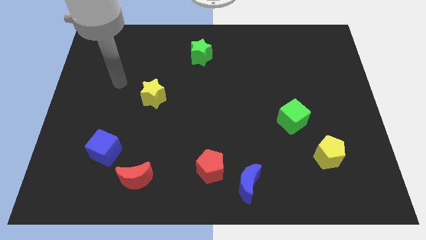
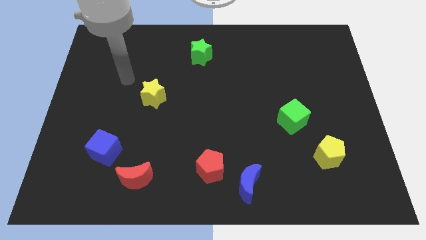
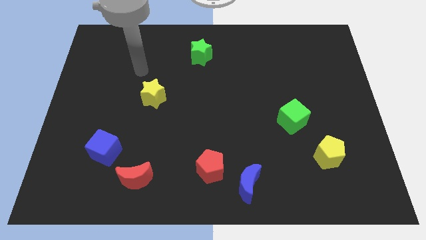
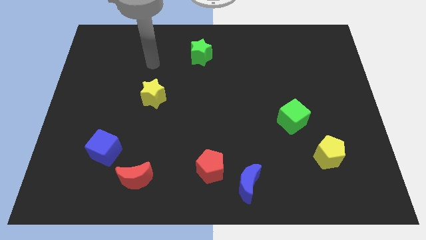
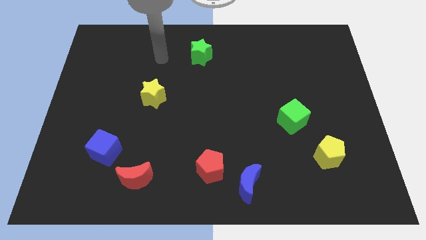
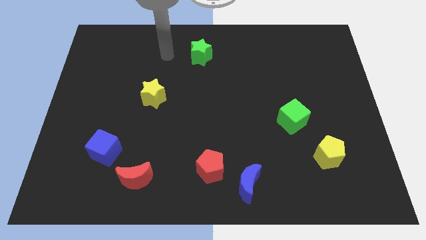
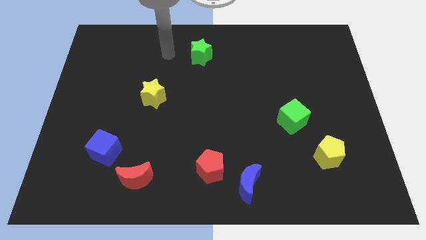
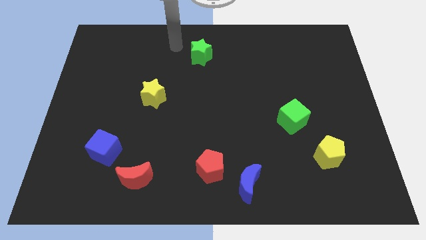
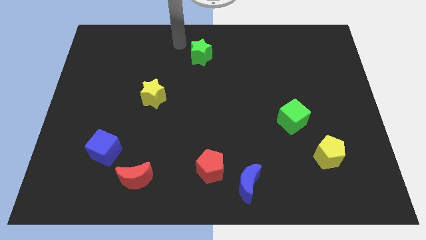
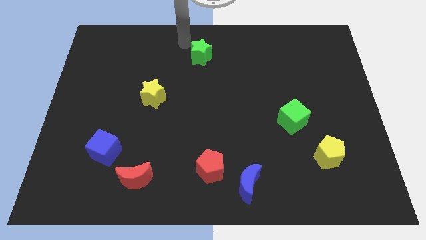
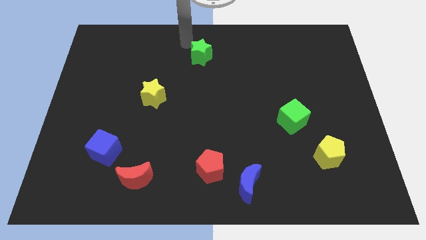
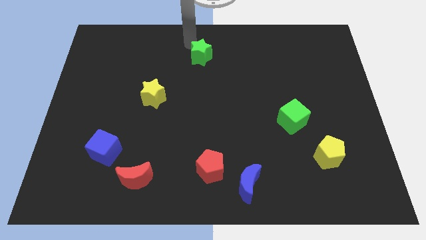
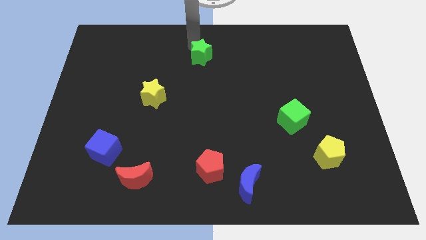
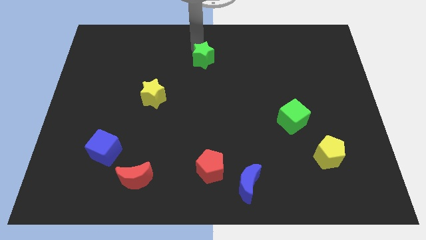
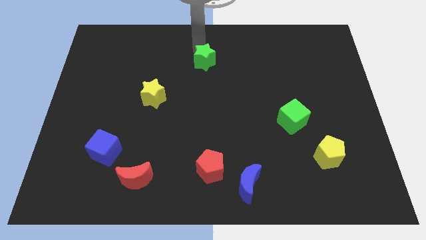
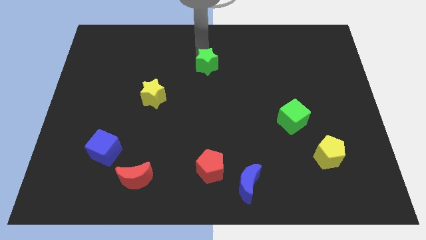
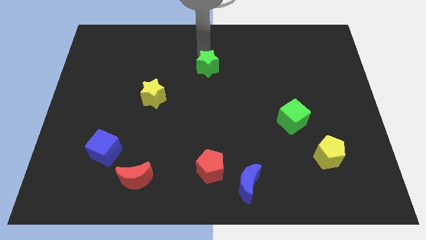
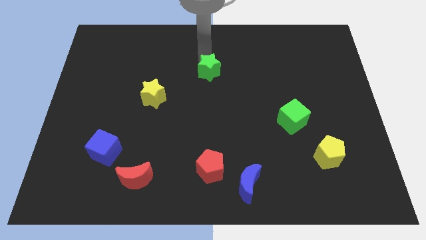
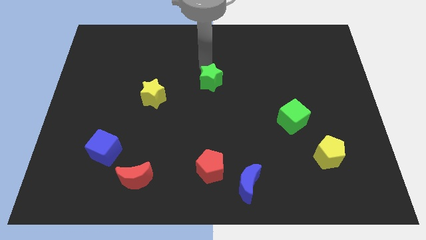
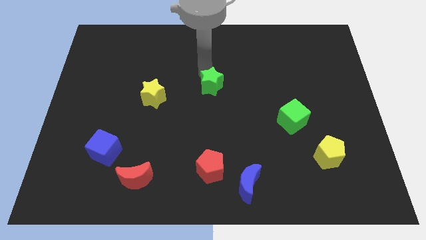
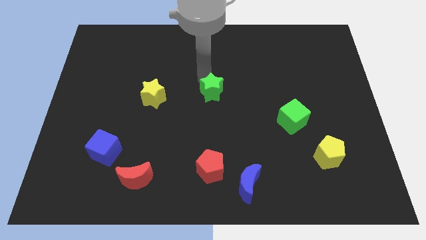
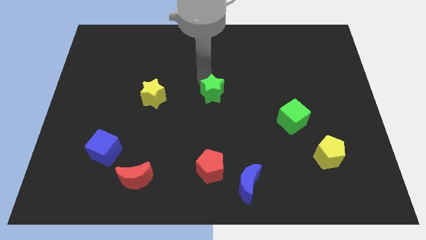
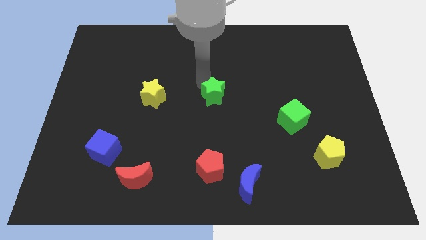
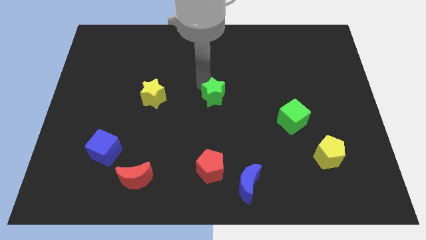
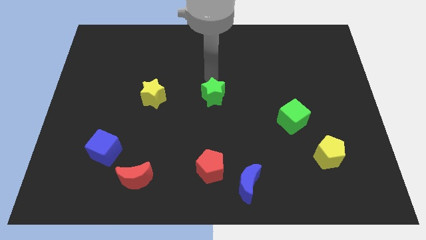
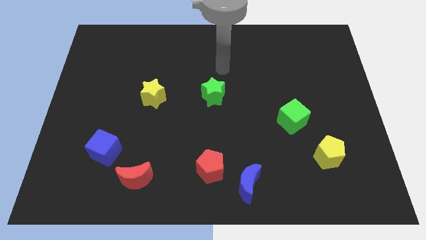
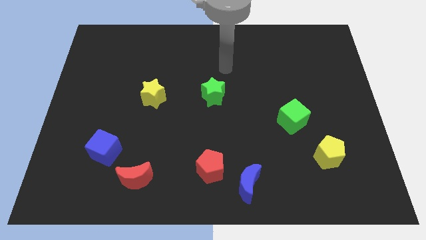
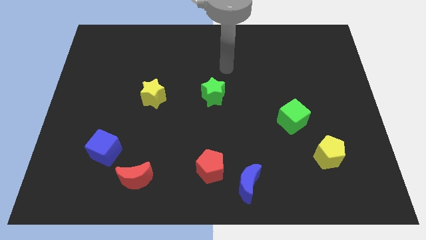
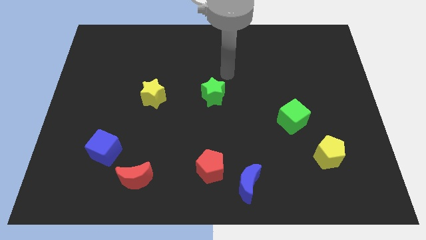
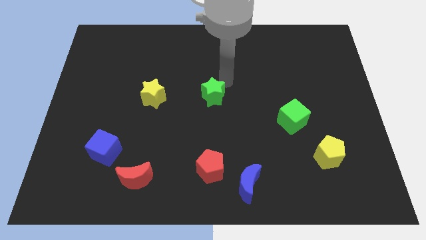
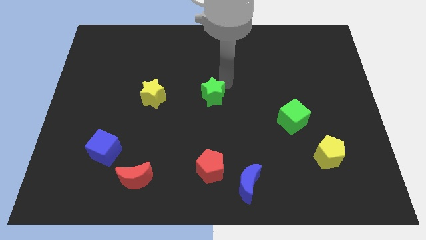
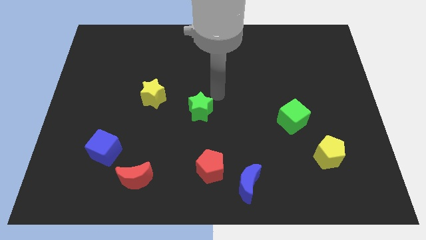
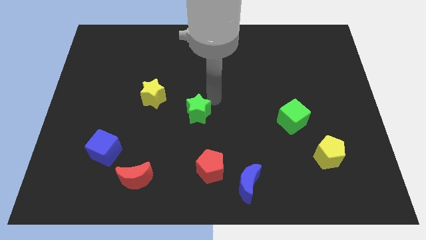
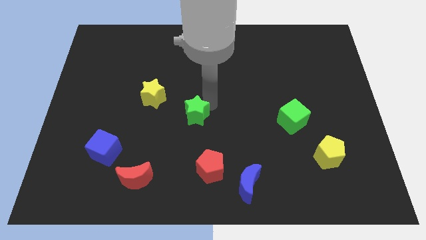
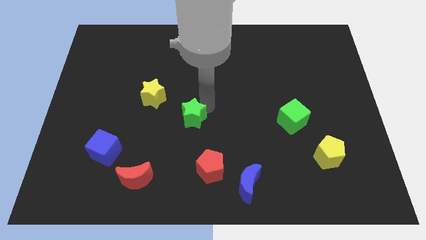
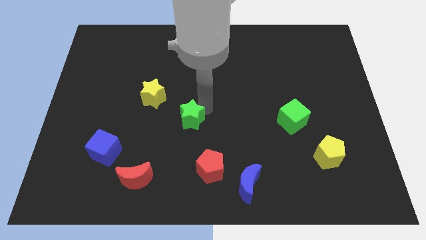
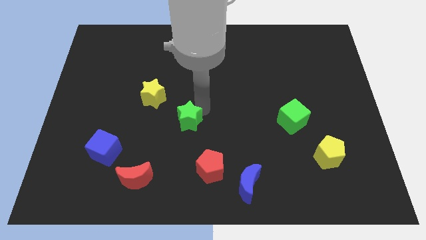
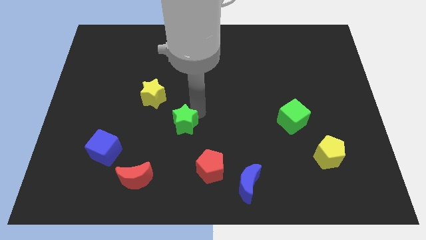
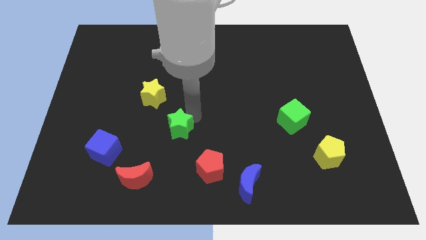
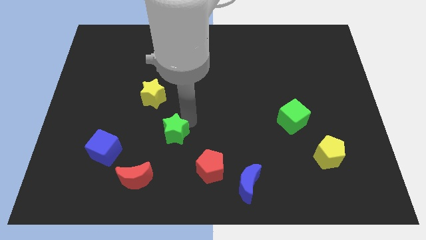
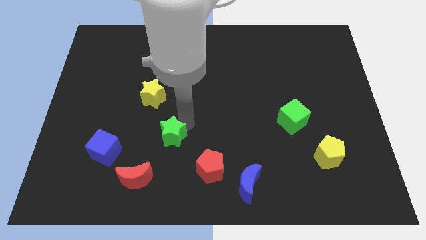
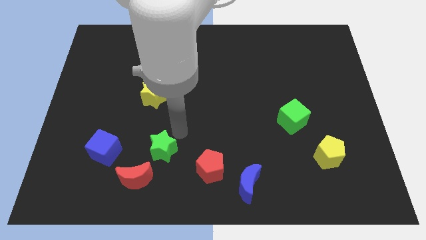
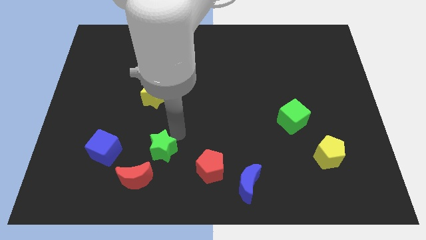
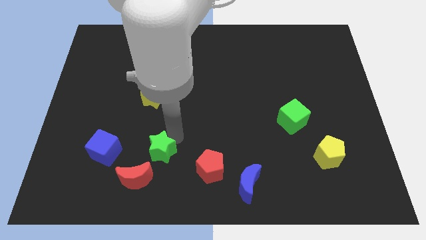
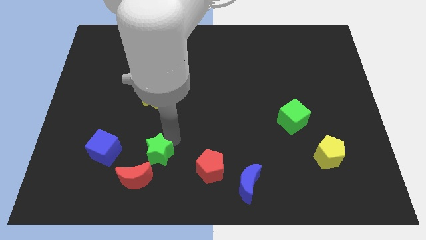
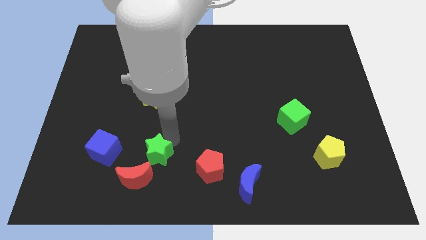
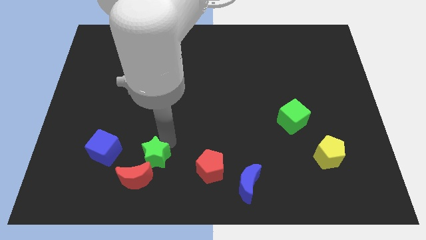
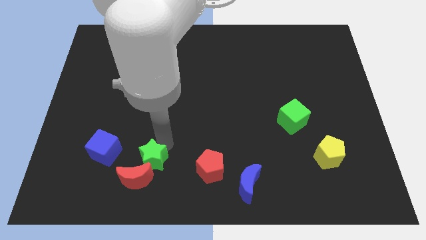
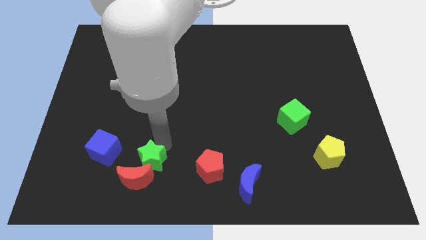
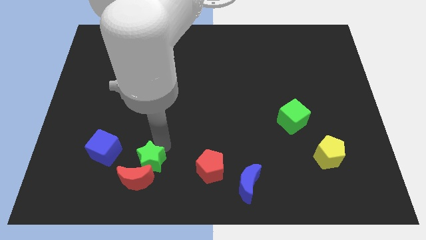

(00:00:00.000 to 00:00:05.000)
move the green star close to the red moon

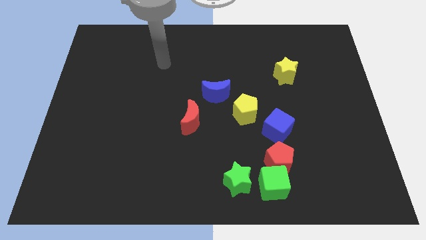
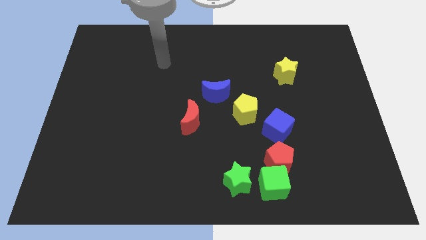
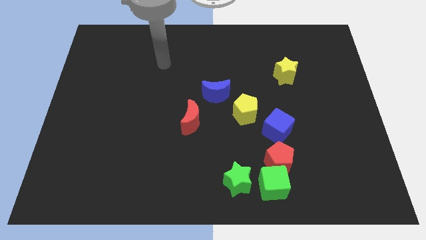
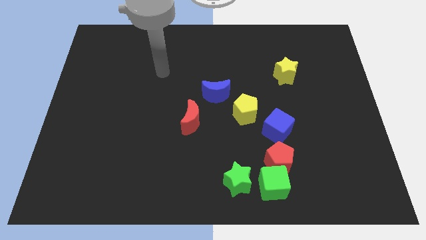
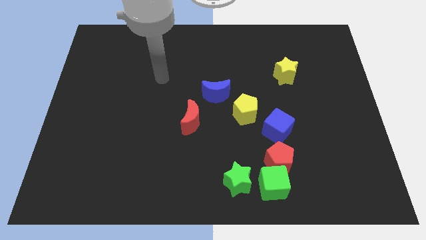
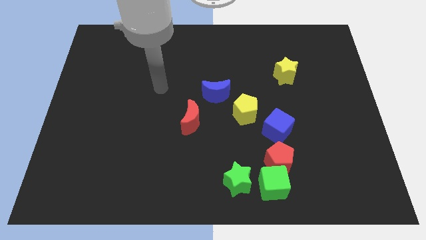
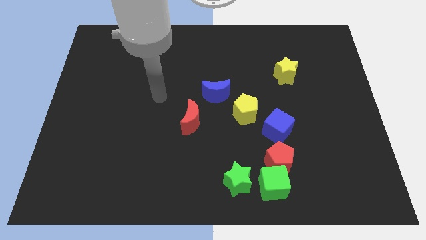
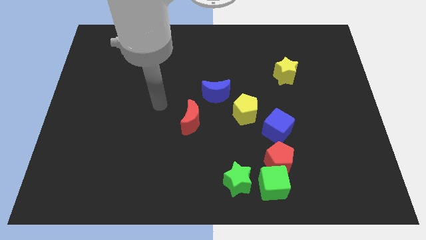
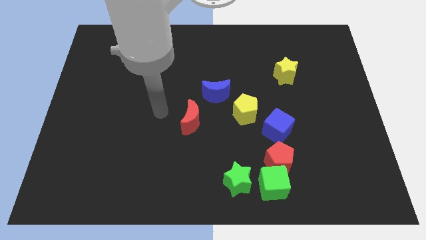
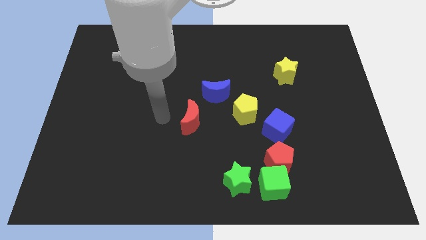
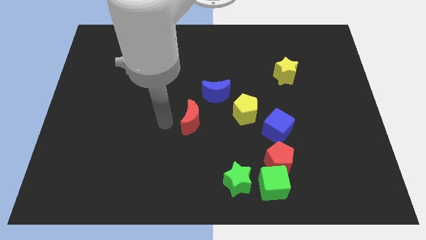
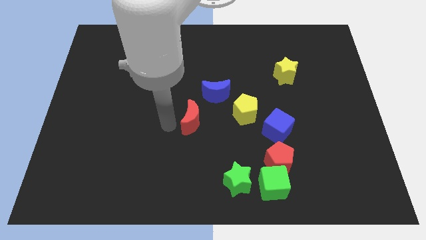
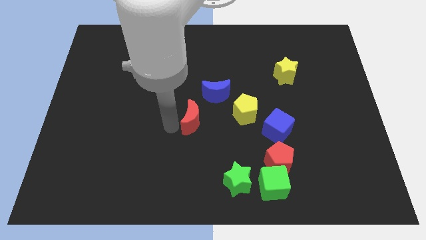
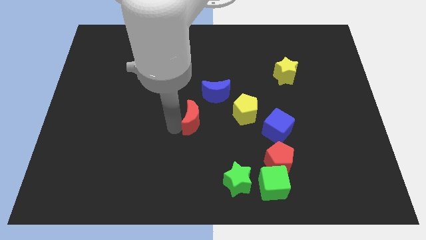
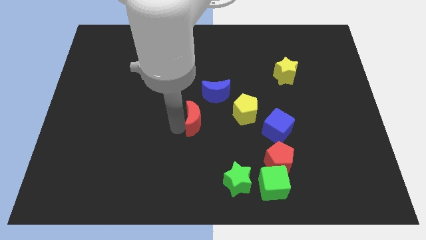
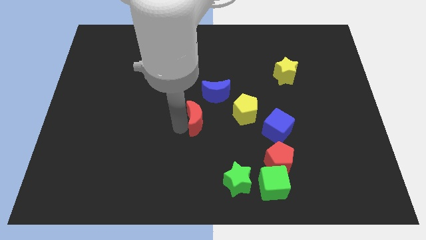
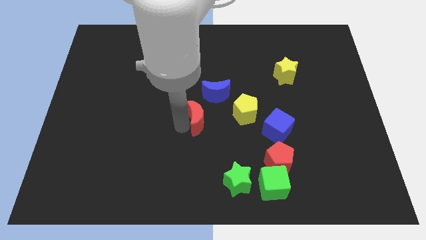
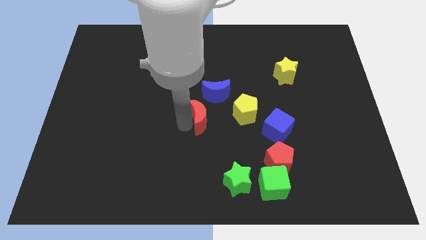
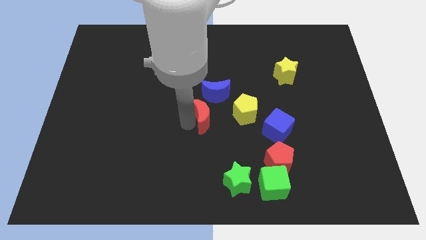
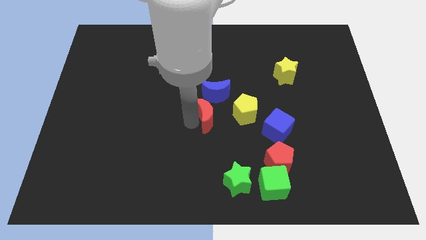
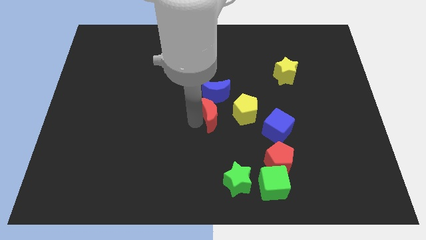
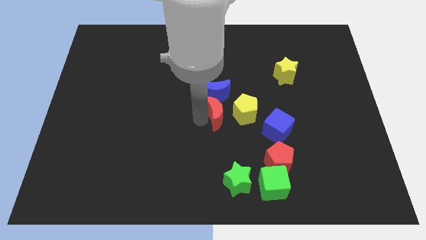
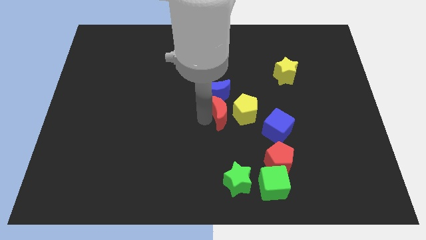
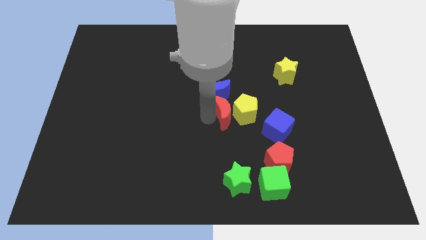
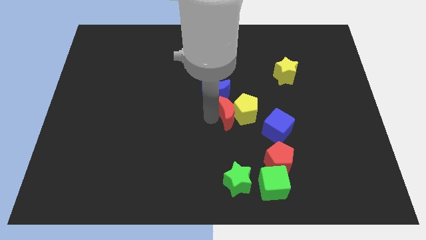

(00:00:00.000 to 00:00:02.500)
push the red moon close to the yellow pentagon

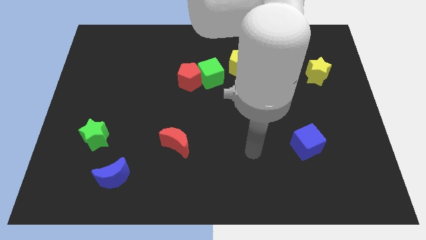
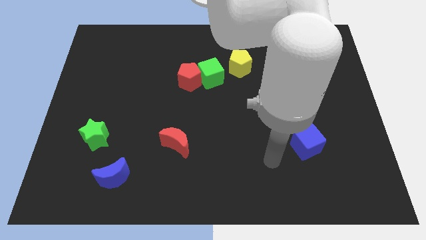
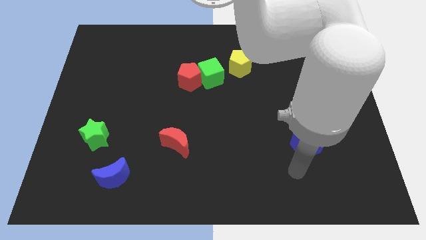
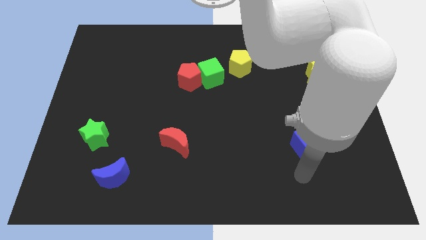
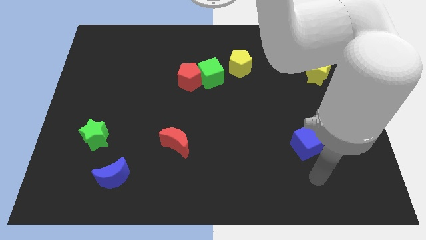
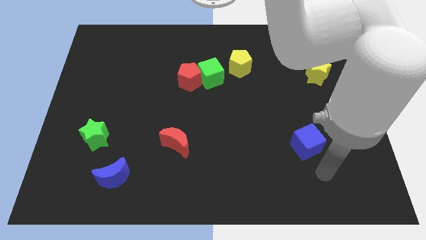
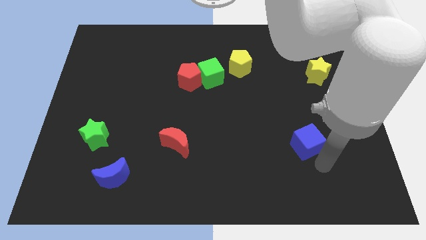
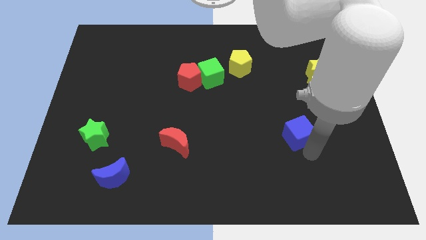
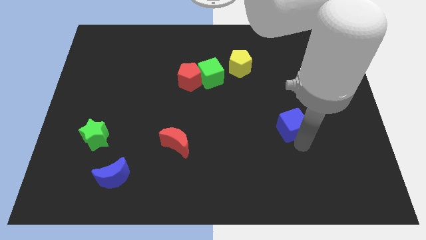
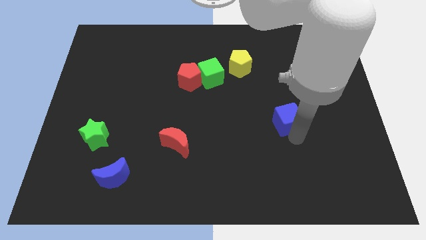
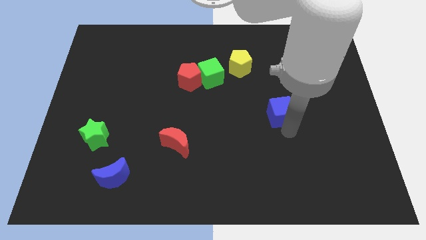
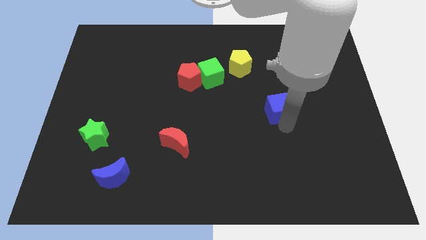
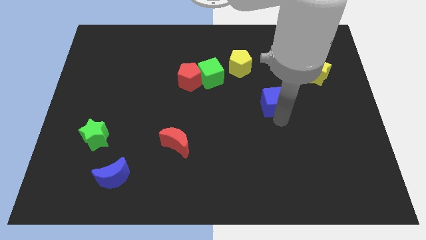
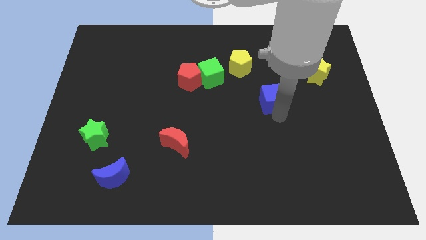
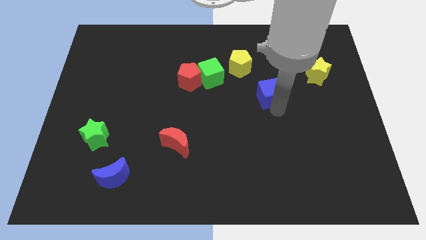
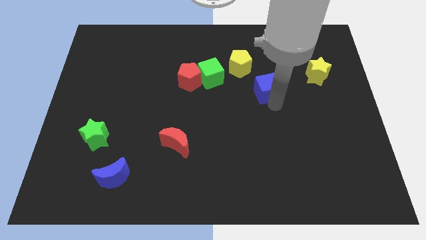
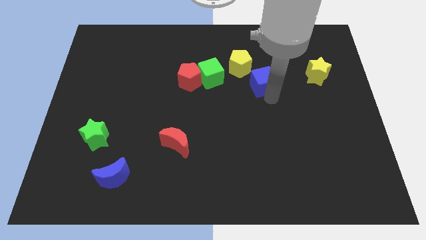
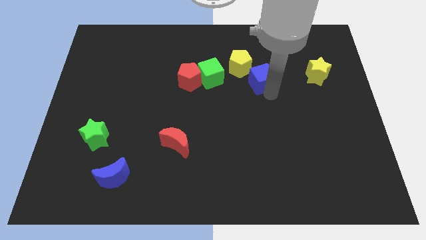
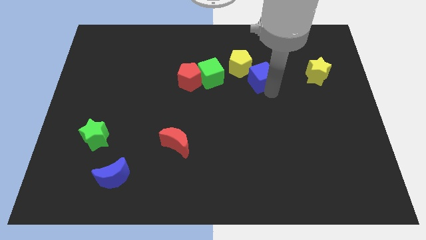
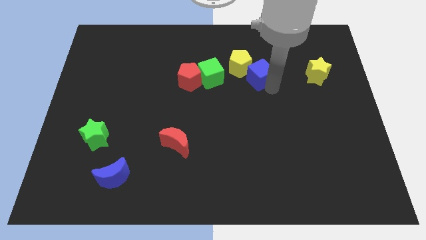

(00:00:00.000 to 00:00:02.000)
slide the blue cube to the yellow pentagon
